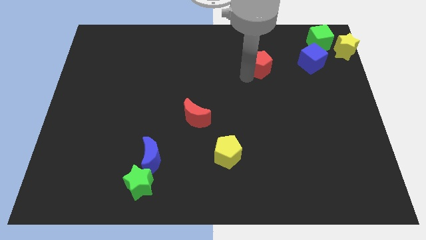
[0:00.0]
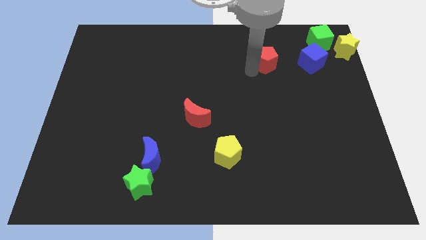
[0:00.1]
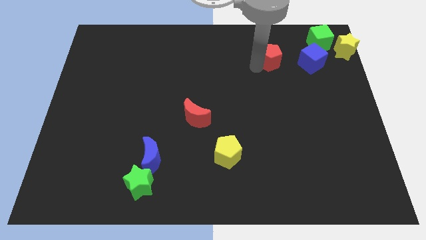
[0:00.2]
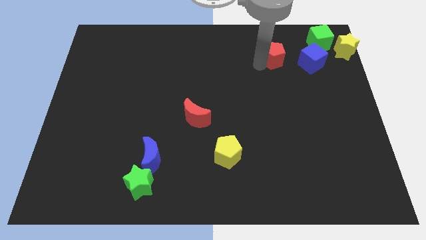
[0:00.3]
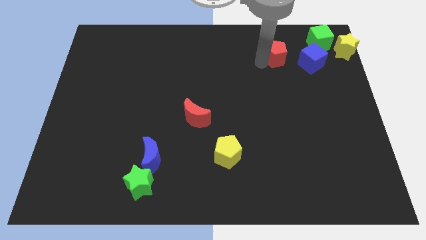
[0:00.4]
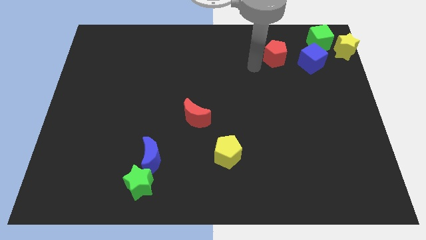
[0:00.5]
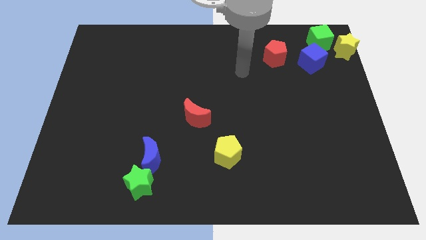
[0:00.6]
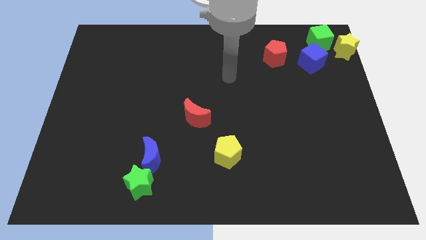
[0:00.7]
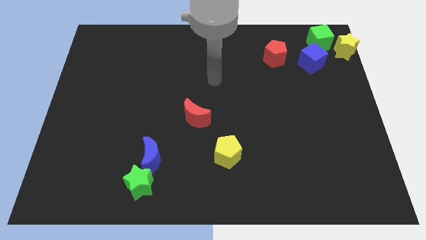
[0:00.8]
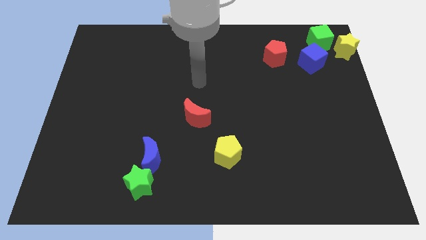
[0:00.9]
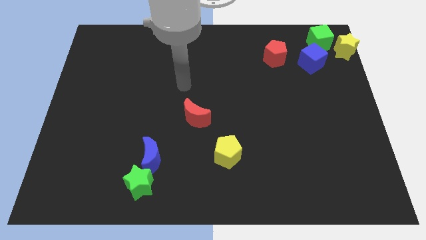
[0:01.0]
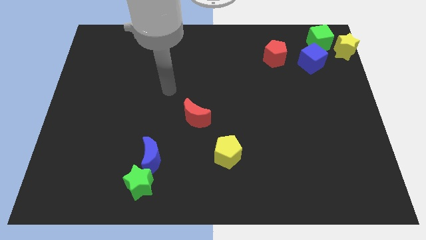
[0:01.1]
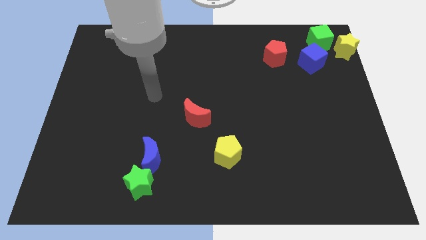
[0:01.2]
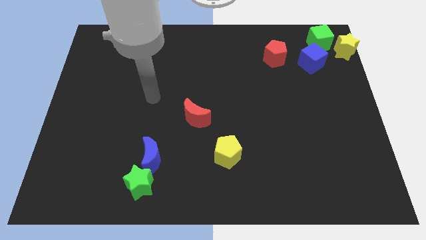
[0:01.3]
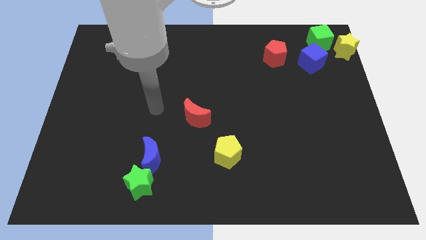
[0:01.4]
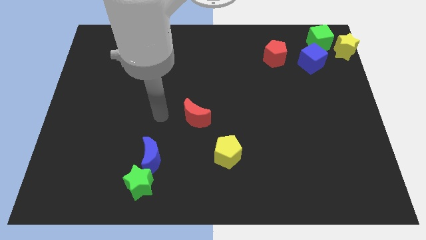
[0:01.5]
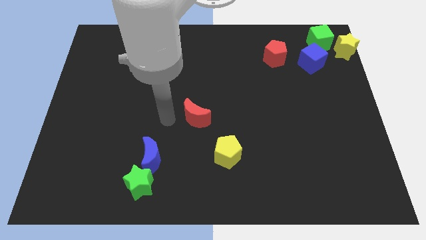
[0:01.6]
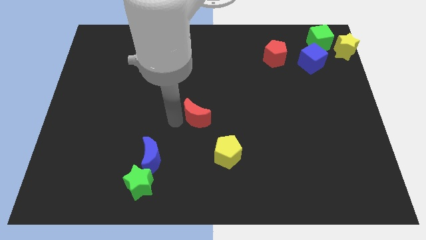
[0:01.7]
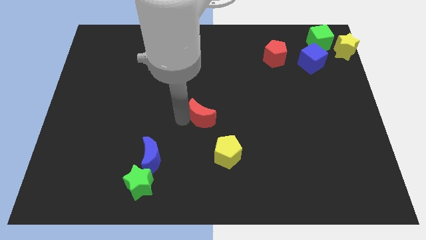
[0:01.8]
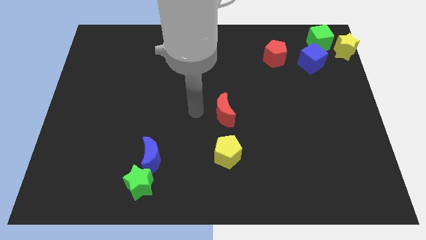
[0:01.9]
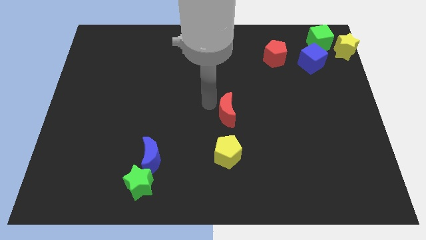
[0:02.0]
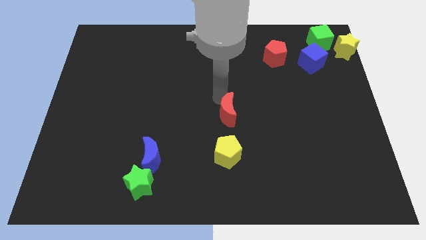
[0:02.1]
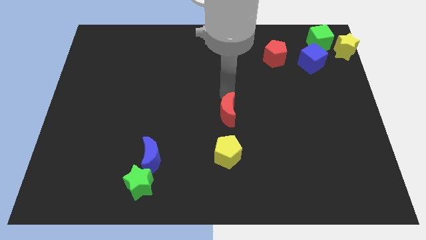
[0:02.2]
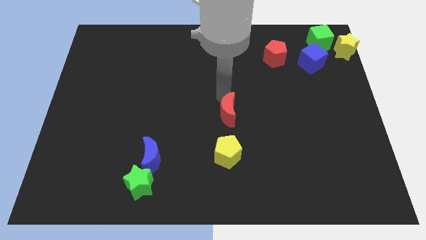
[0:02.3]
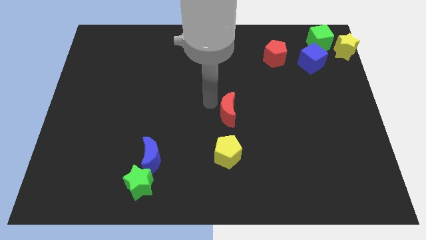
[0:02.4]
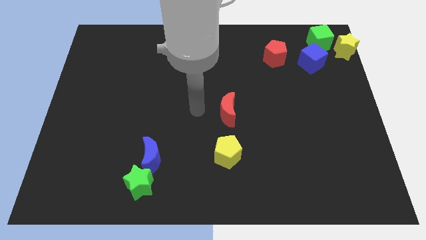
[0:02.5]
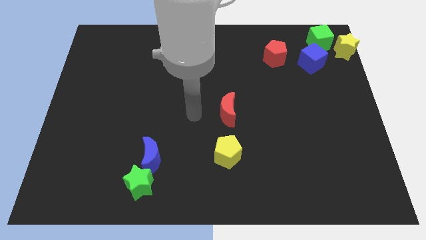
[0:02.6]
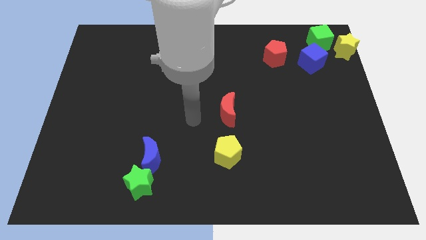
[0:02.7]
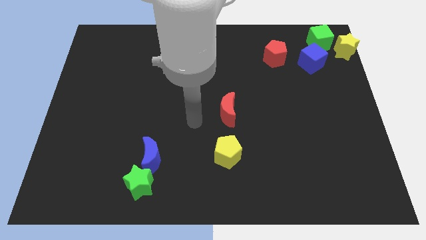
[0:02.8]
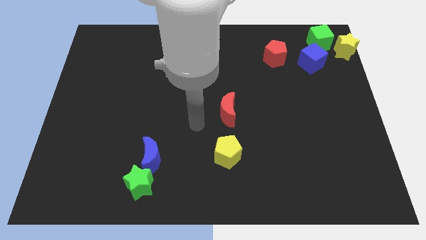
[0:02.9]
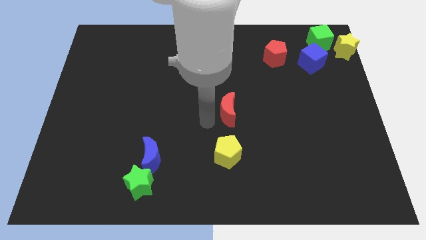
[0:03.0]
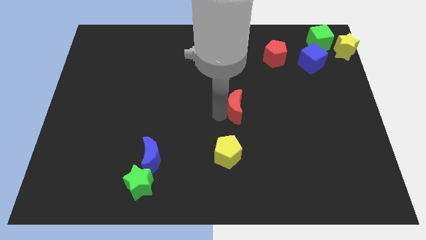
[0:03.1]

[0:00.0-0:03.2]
place the red moon to the center of the board

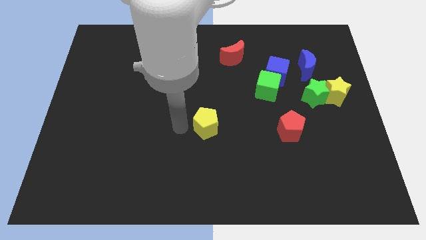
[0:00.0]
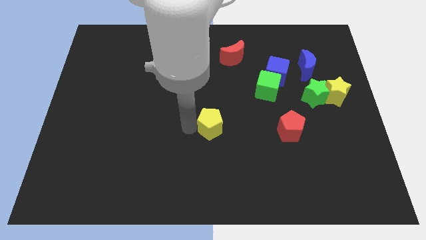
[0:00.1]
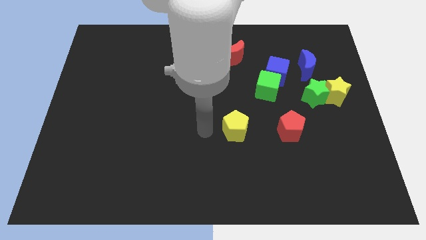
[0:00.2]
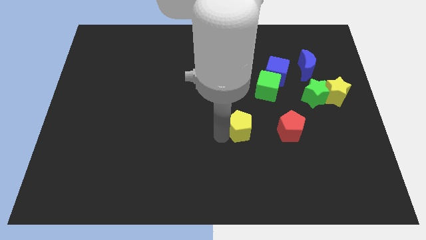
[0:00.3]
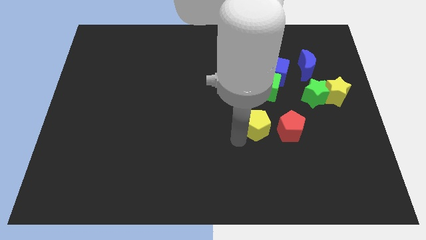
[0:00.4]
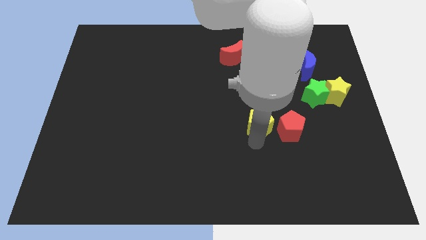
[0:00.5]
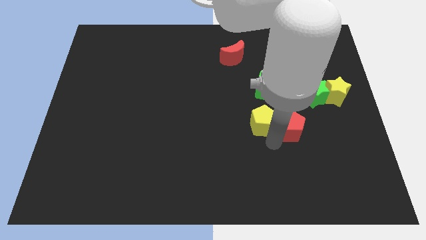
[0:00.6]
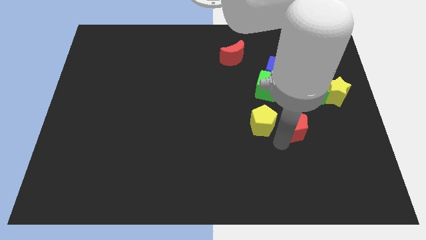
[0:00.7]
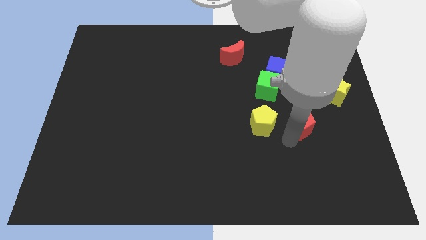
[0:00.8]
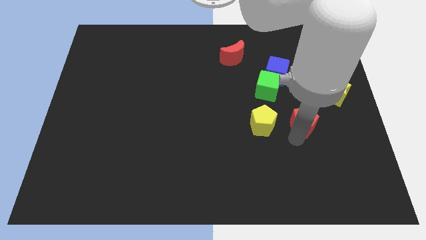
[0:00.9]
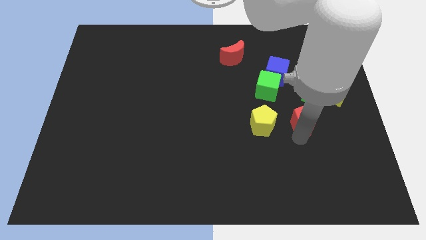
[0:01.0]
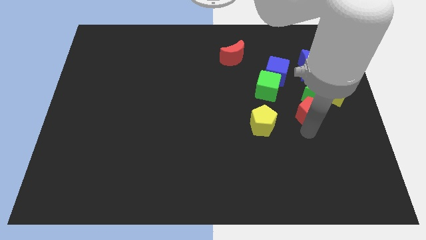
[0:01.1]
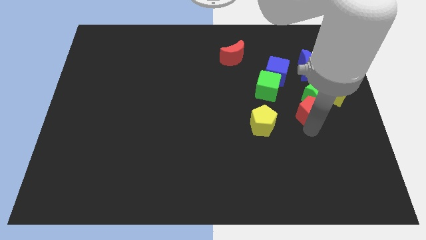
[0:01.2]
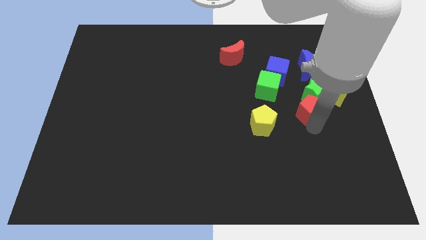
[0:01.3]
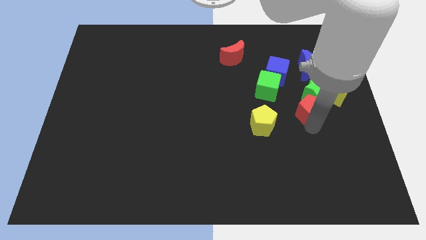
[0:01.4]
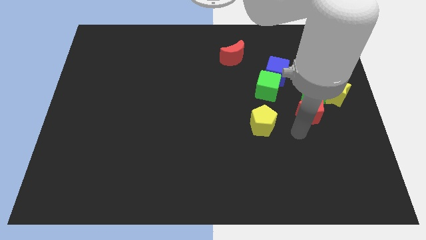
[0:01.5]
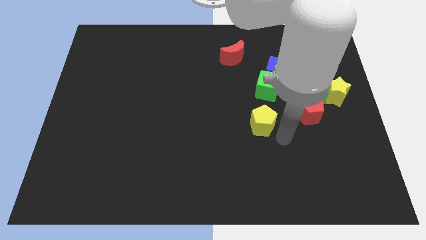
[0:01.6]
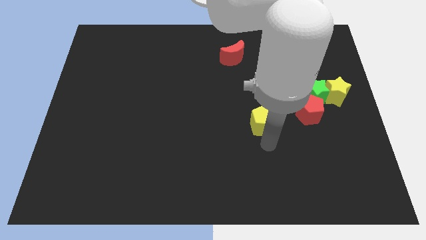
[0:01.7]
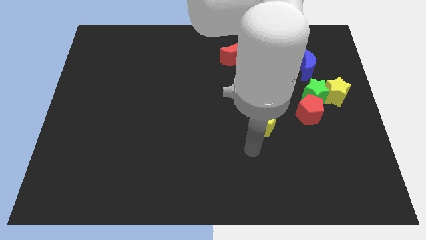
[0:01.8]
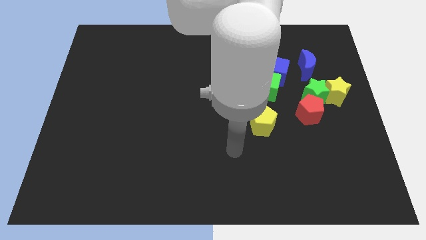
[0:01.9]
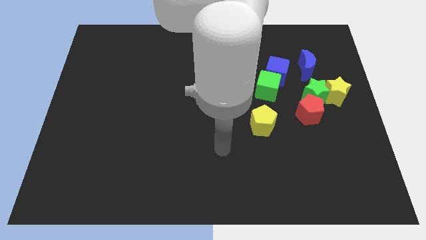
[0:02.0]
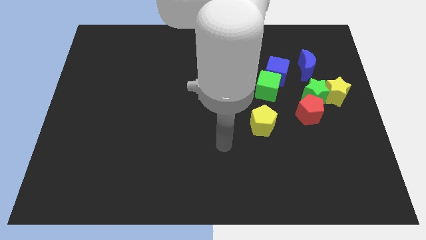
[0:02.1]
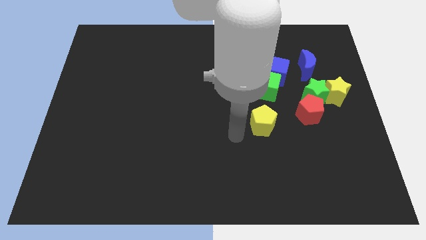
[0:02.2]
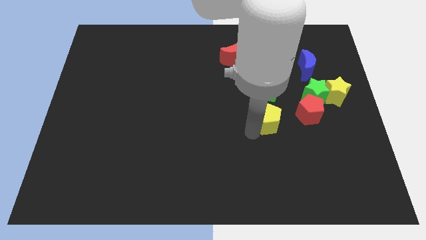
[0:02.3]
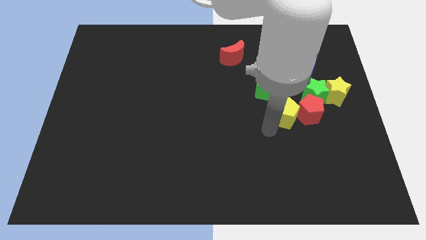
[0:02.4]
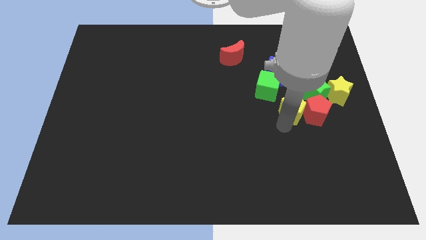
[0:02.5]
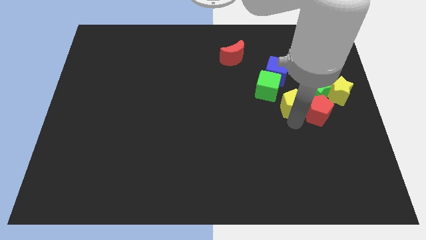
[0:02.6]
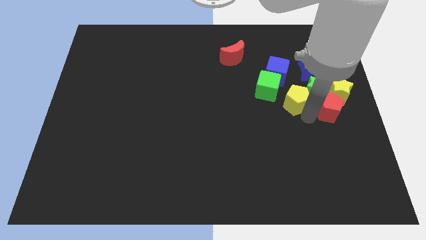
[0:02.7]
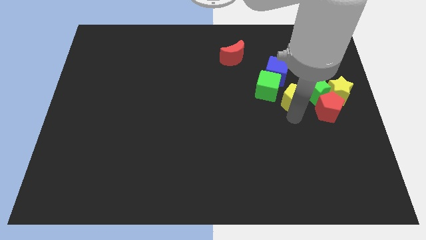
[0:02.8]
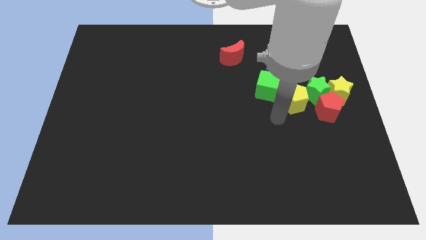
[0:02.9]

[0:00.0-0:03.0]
move the yellow pentagon and the red pentagon into the green star

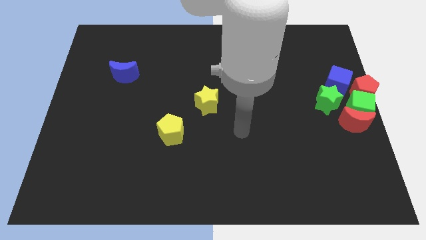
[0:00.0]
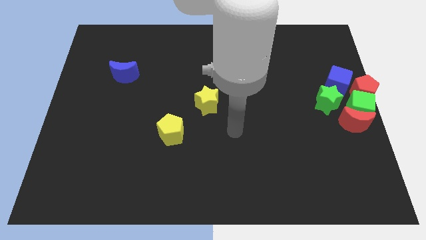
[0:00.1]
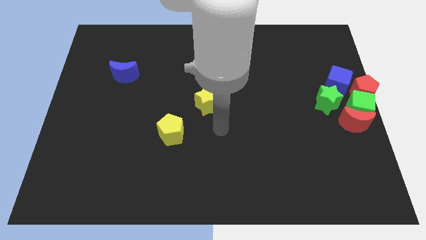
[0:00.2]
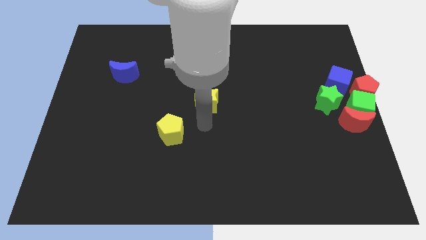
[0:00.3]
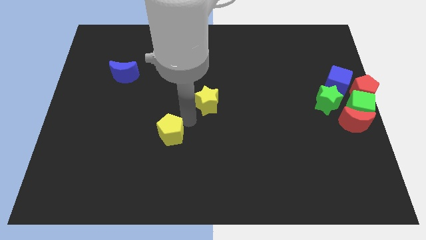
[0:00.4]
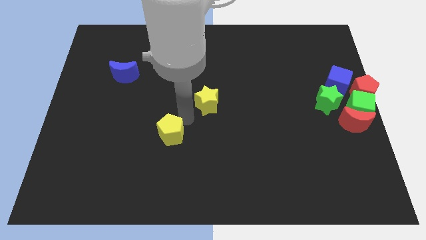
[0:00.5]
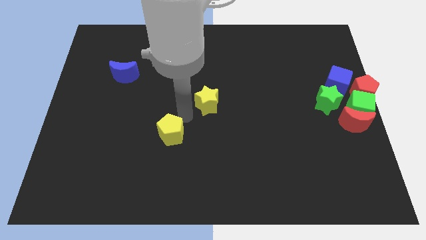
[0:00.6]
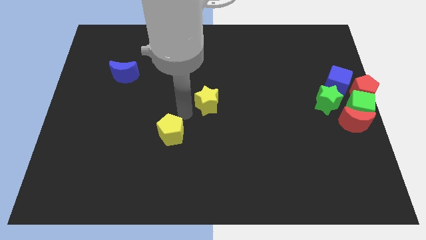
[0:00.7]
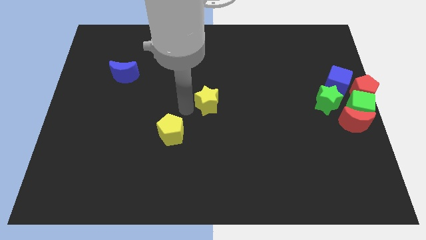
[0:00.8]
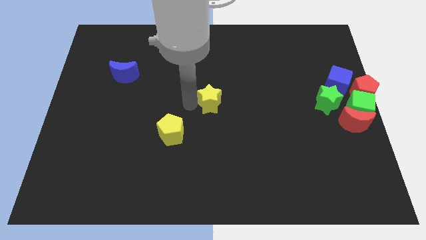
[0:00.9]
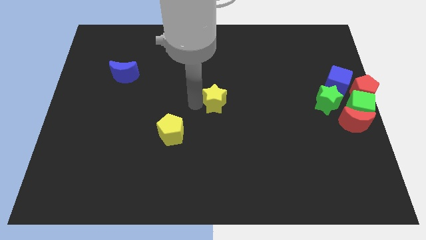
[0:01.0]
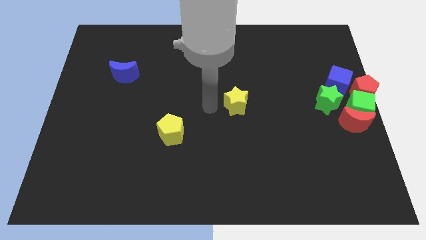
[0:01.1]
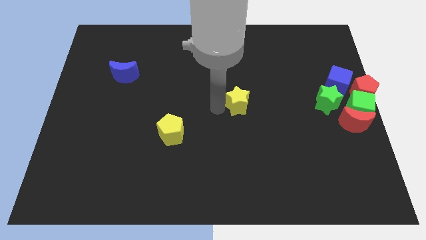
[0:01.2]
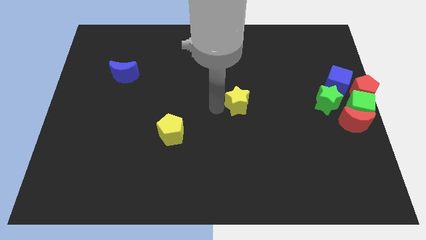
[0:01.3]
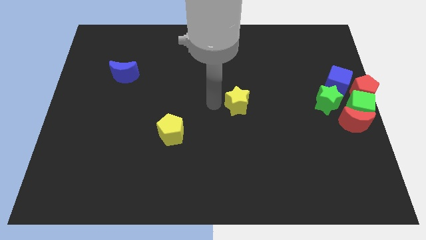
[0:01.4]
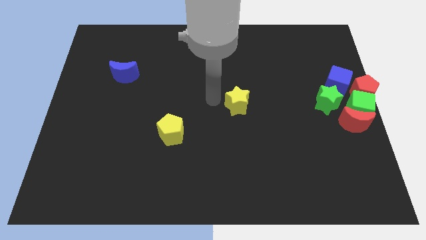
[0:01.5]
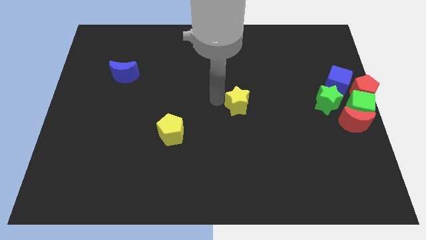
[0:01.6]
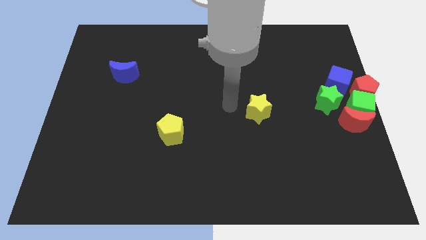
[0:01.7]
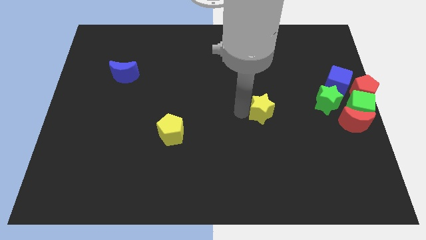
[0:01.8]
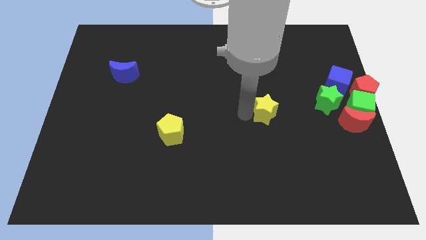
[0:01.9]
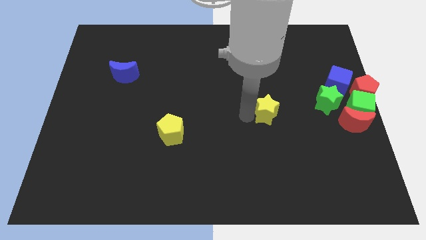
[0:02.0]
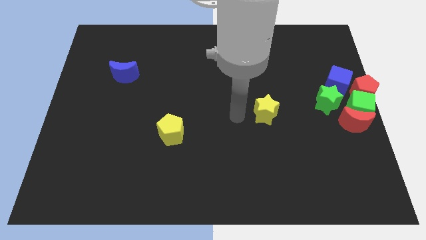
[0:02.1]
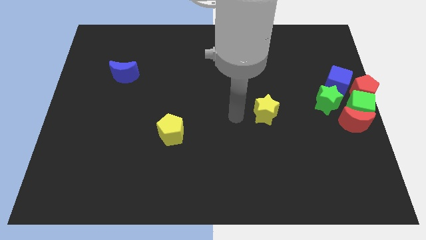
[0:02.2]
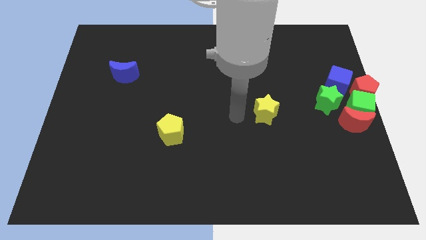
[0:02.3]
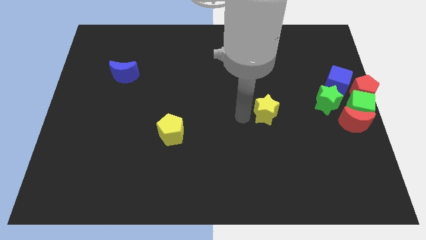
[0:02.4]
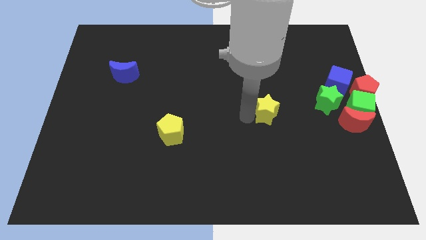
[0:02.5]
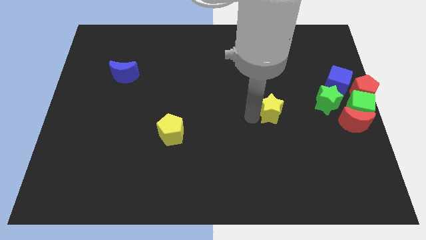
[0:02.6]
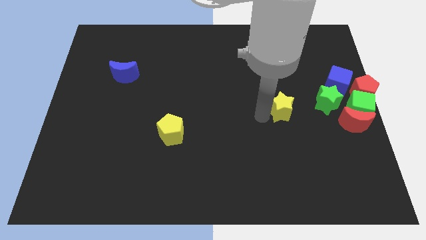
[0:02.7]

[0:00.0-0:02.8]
push the yellow star between green star and yellow pentagon
